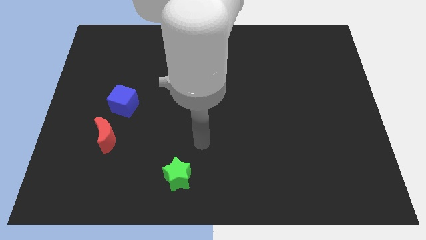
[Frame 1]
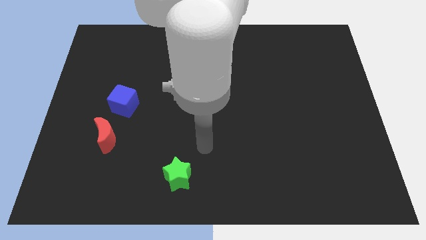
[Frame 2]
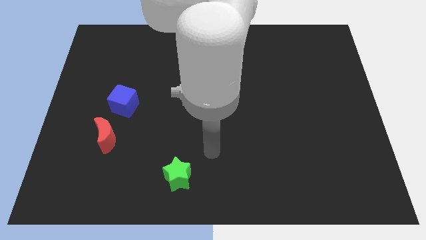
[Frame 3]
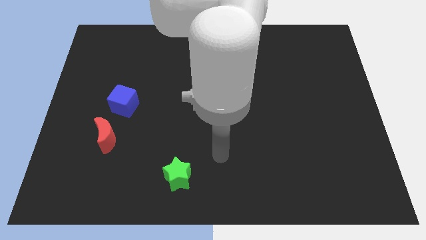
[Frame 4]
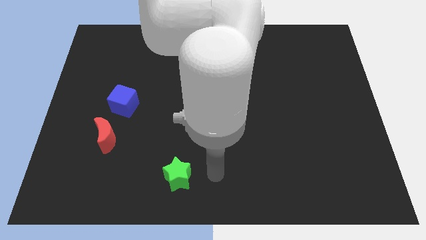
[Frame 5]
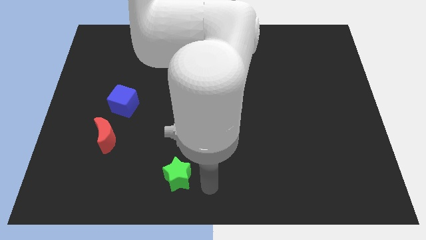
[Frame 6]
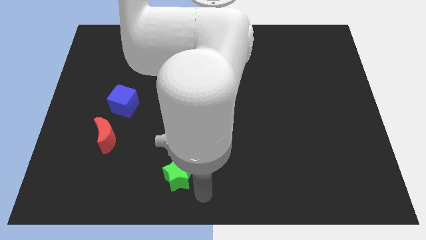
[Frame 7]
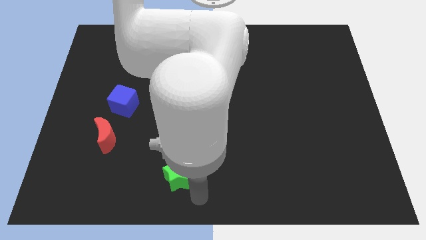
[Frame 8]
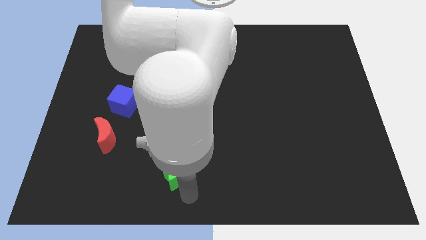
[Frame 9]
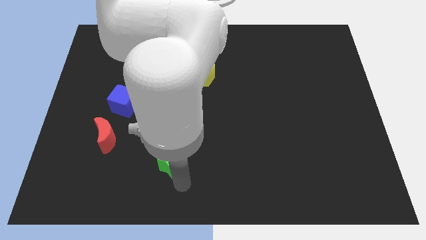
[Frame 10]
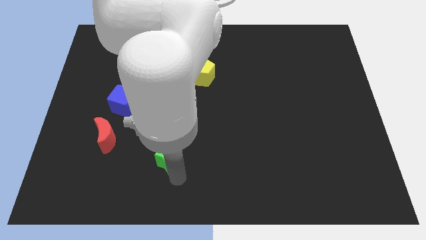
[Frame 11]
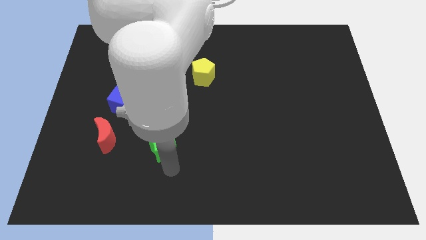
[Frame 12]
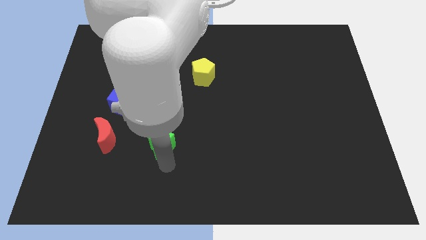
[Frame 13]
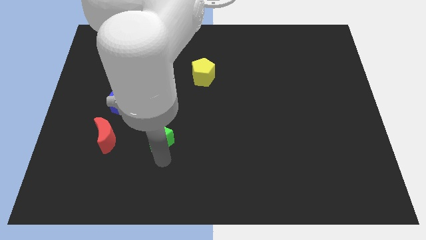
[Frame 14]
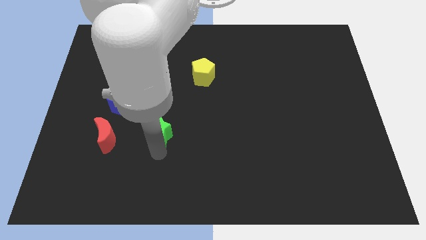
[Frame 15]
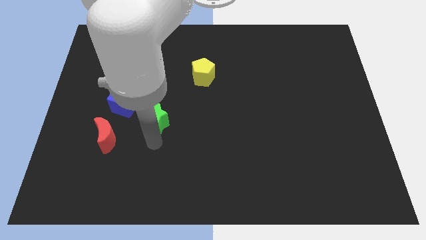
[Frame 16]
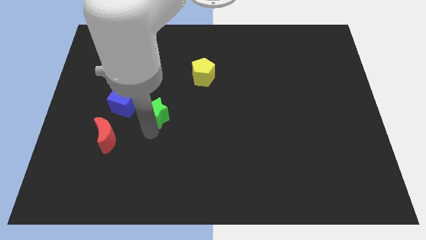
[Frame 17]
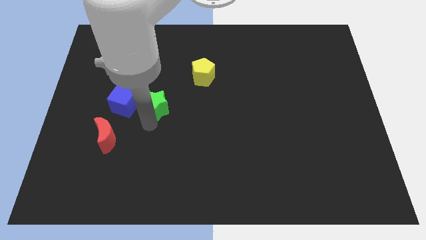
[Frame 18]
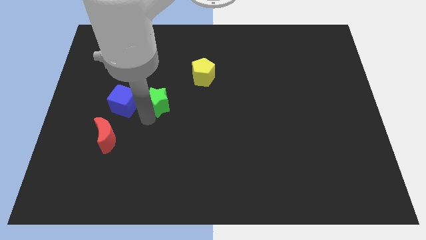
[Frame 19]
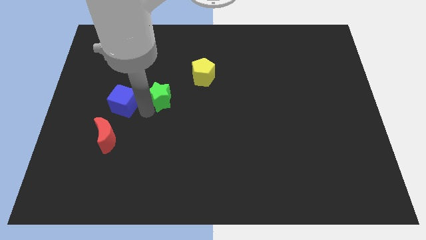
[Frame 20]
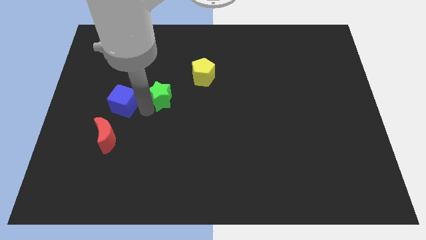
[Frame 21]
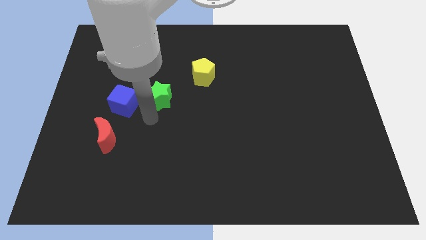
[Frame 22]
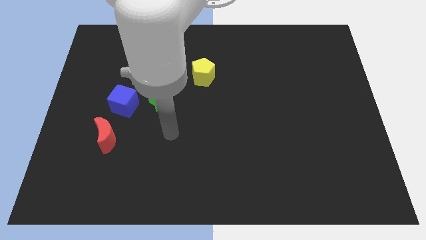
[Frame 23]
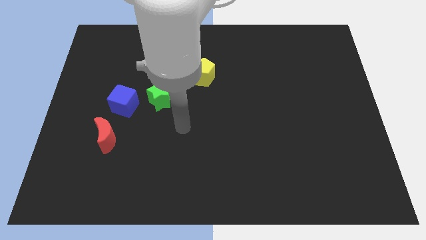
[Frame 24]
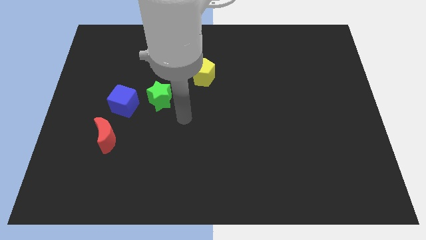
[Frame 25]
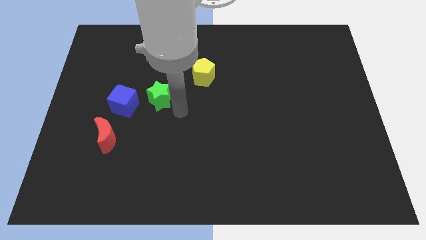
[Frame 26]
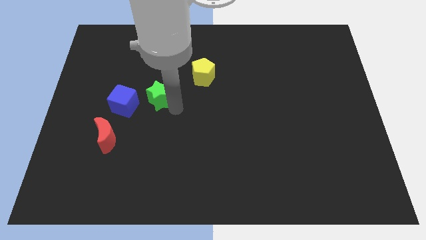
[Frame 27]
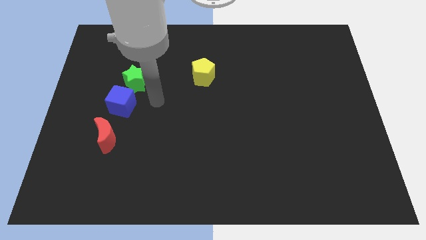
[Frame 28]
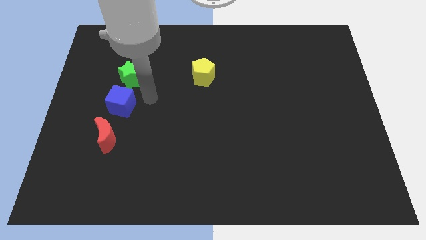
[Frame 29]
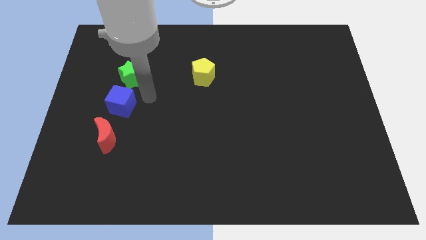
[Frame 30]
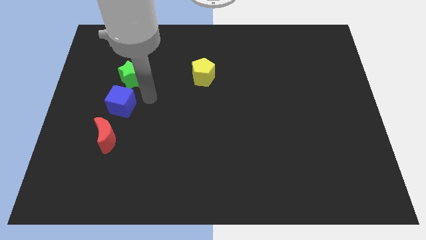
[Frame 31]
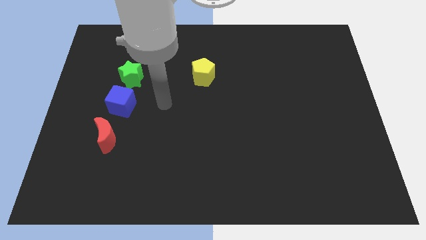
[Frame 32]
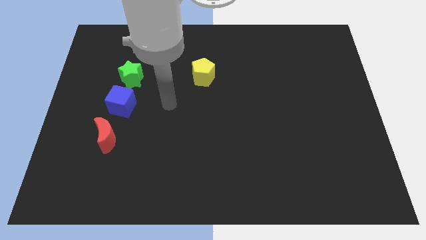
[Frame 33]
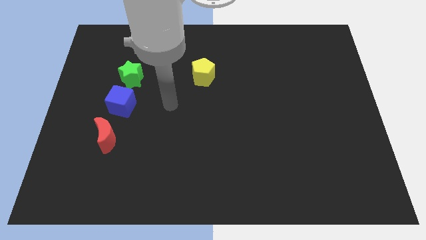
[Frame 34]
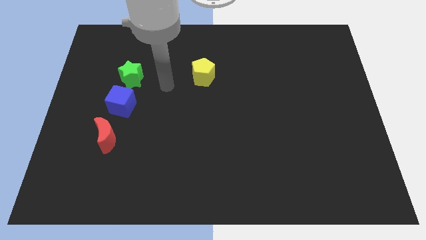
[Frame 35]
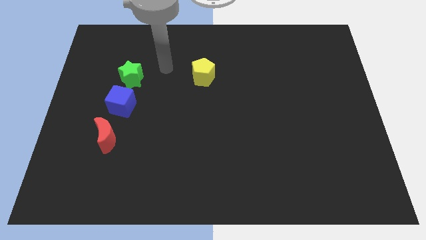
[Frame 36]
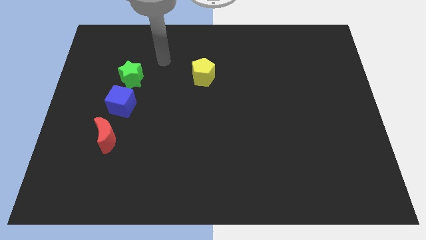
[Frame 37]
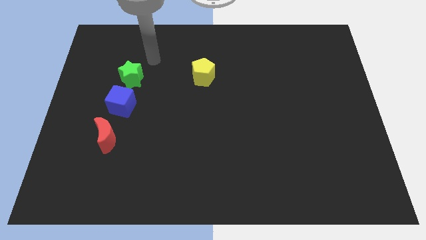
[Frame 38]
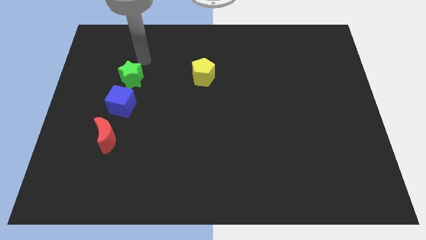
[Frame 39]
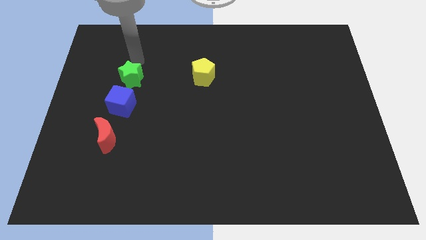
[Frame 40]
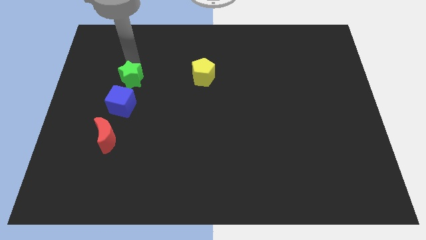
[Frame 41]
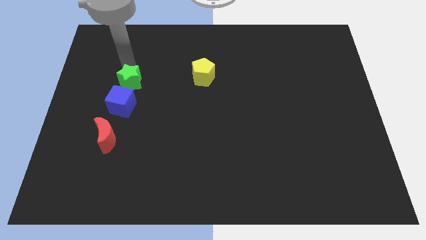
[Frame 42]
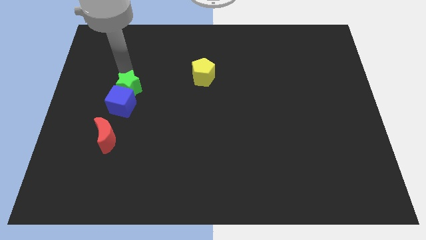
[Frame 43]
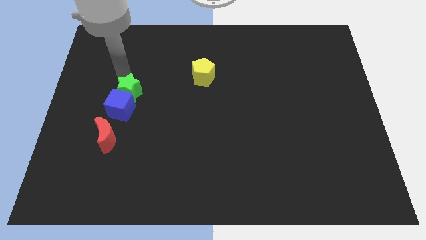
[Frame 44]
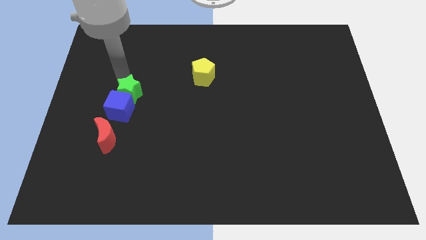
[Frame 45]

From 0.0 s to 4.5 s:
put the green block towards the blue block

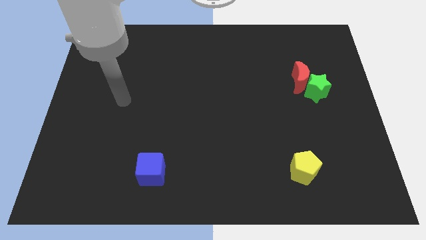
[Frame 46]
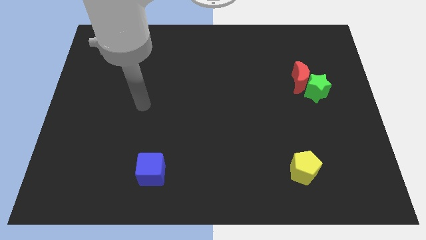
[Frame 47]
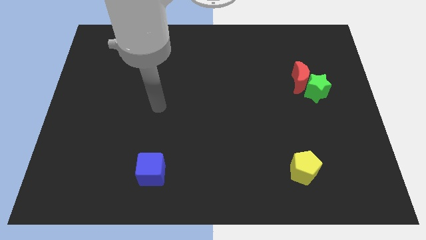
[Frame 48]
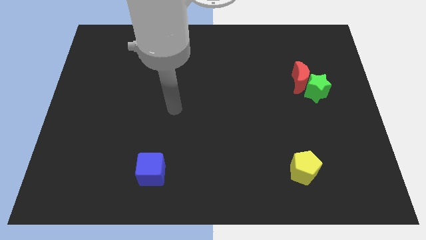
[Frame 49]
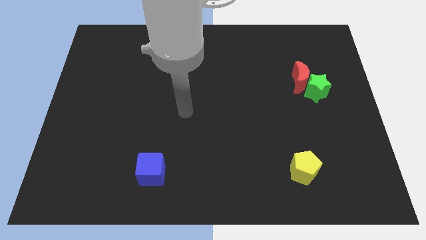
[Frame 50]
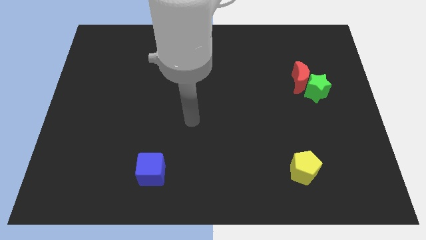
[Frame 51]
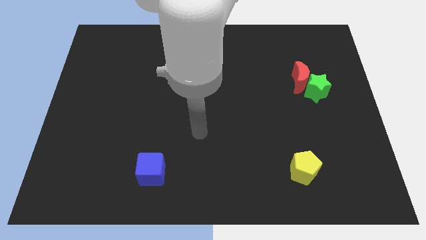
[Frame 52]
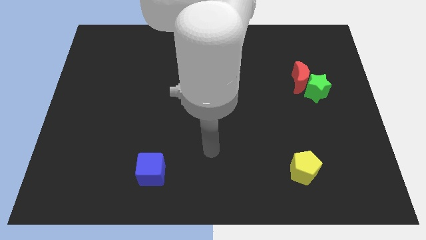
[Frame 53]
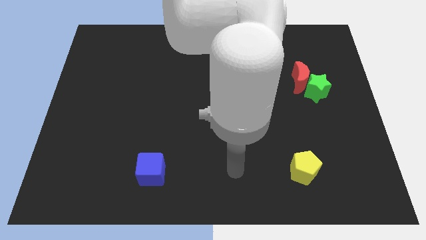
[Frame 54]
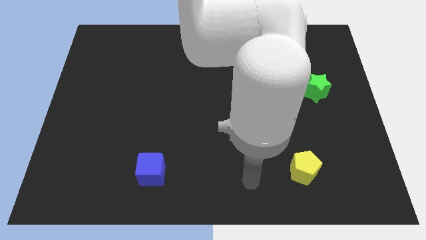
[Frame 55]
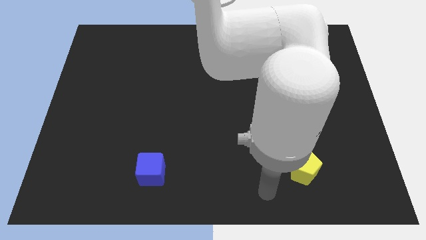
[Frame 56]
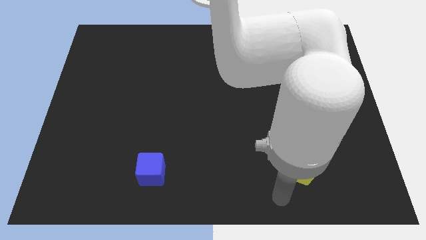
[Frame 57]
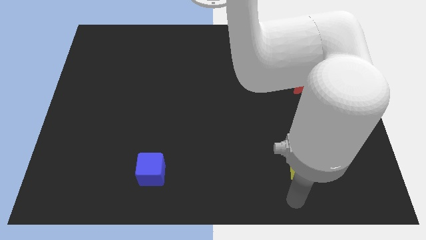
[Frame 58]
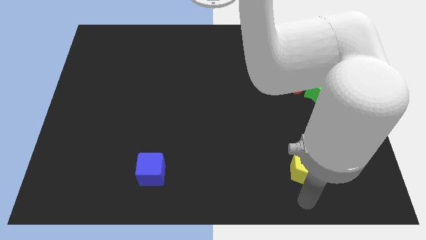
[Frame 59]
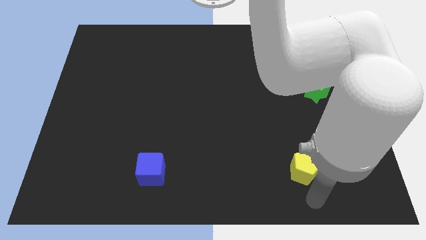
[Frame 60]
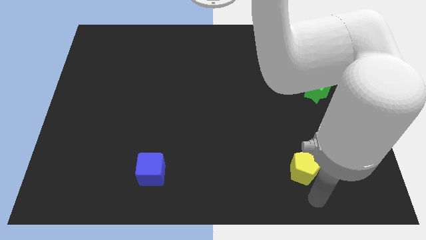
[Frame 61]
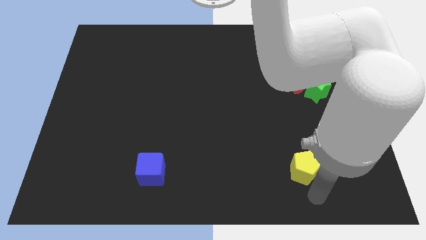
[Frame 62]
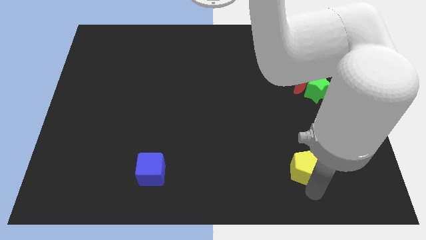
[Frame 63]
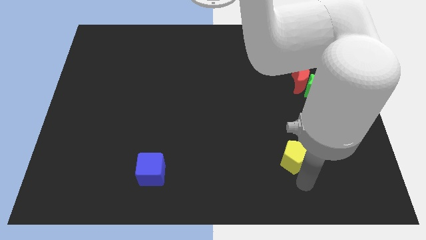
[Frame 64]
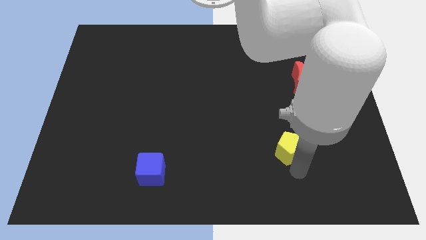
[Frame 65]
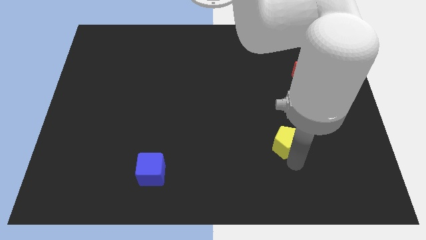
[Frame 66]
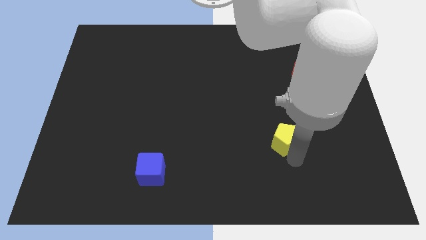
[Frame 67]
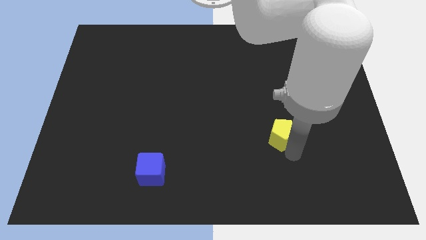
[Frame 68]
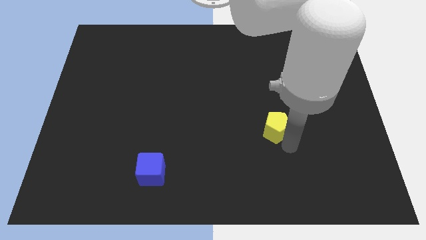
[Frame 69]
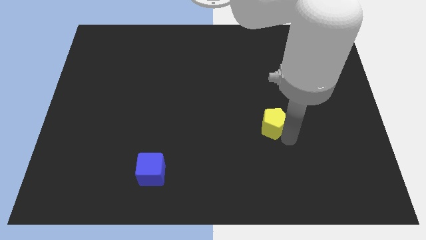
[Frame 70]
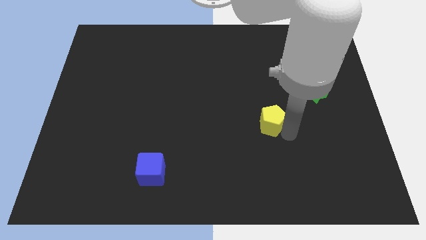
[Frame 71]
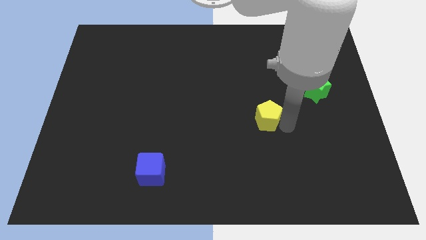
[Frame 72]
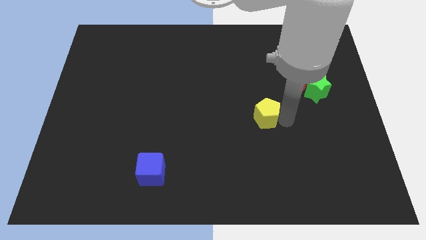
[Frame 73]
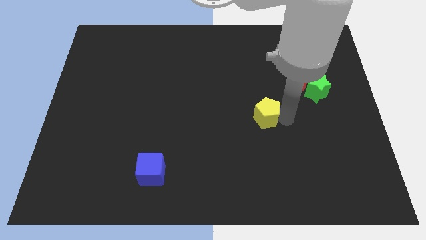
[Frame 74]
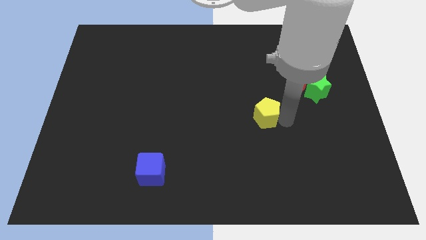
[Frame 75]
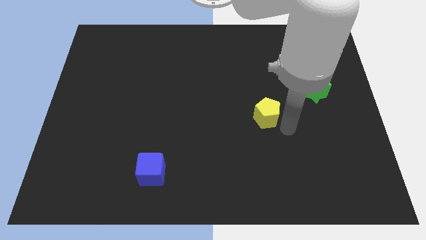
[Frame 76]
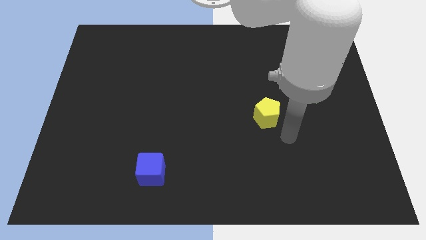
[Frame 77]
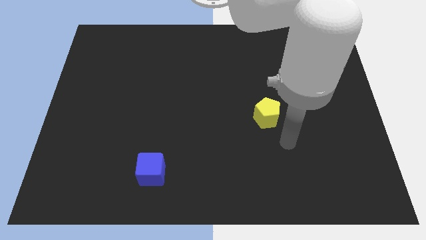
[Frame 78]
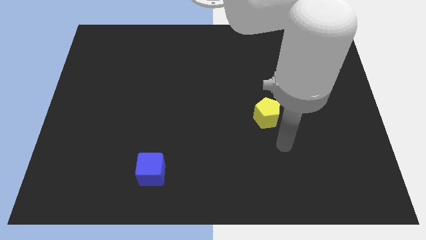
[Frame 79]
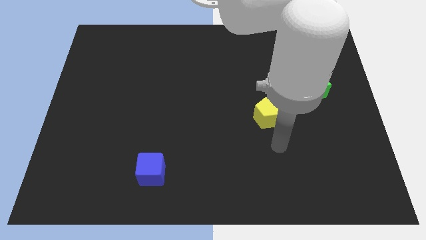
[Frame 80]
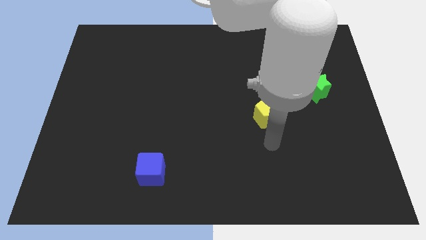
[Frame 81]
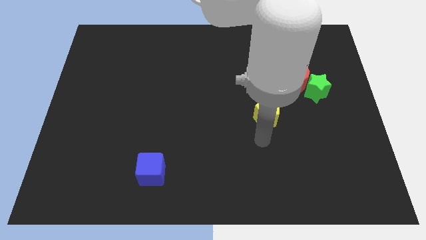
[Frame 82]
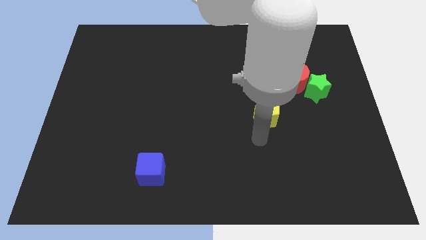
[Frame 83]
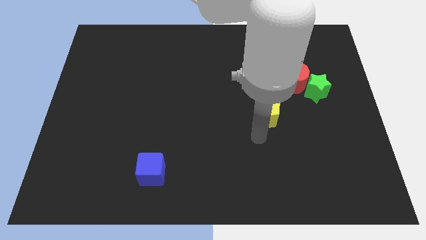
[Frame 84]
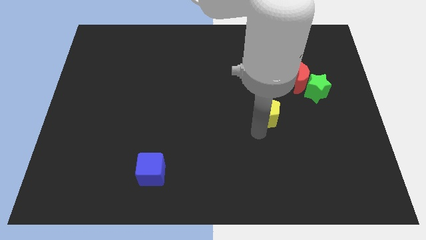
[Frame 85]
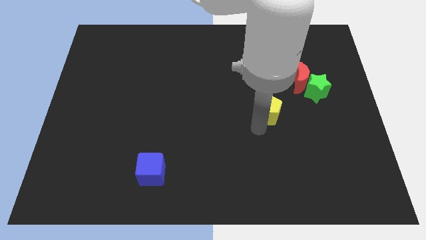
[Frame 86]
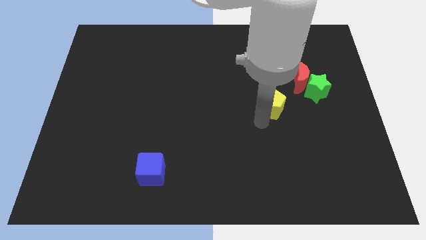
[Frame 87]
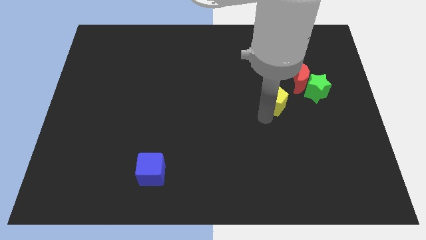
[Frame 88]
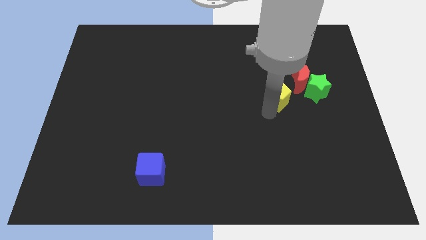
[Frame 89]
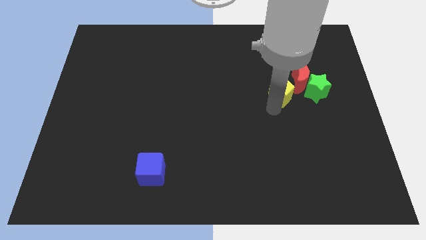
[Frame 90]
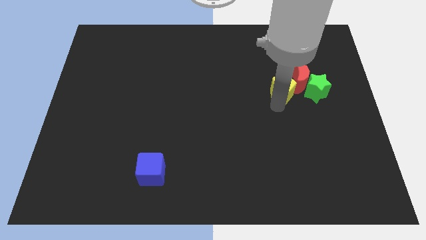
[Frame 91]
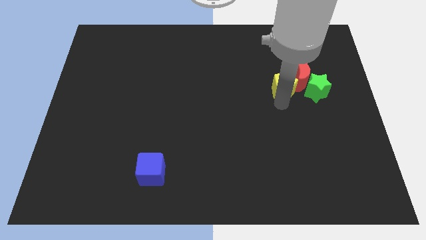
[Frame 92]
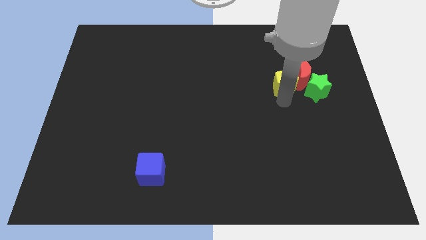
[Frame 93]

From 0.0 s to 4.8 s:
slide the yellow pentagon towards the red moon
